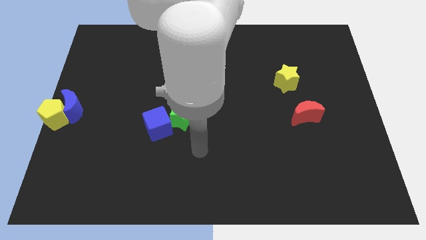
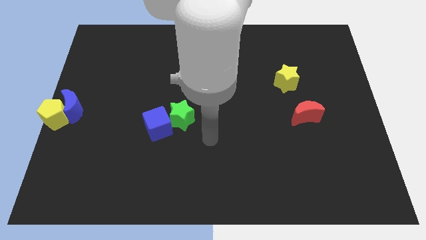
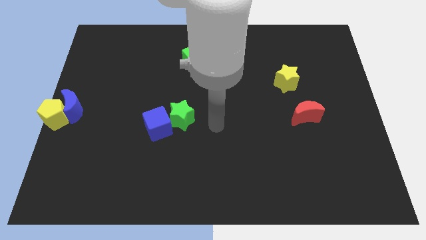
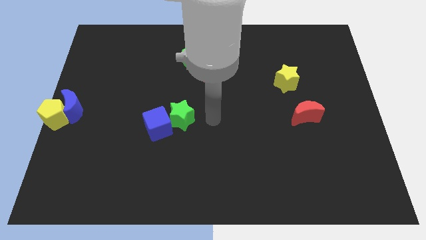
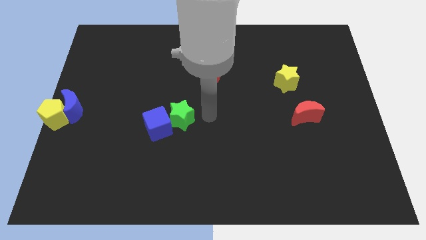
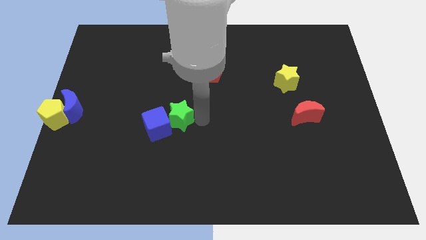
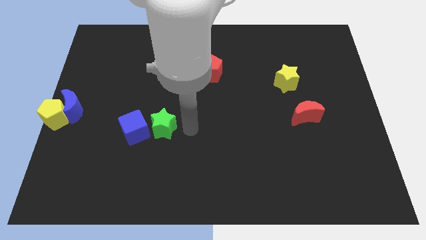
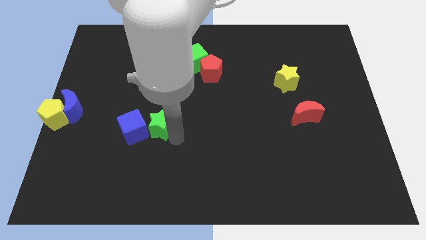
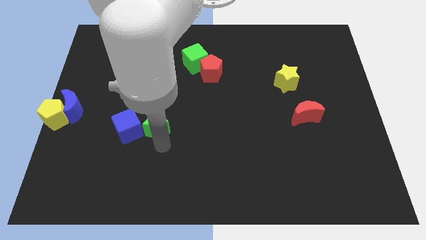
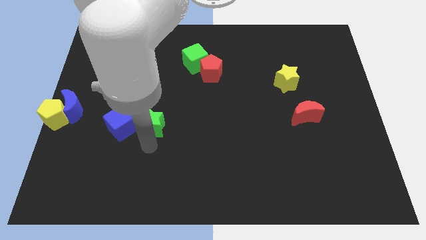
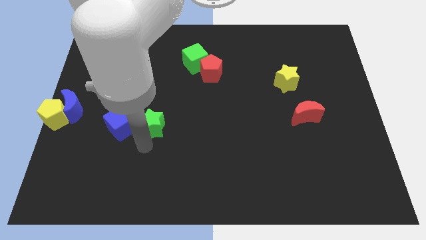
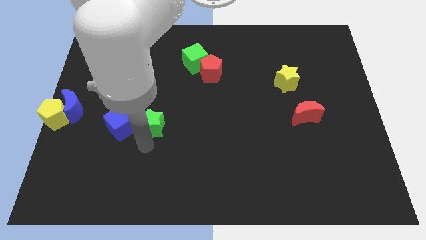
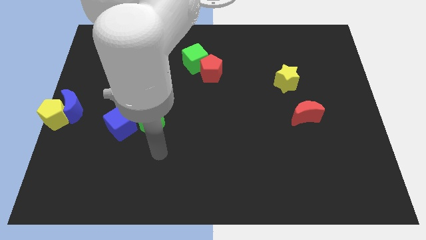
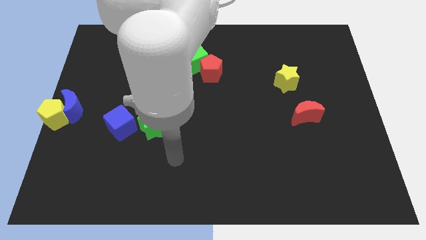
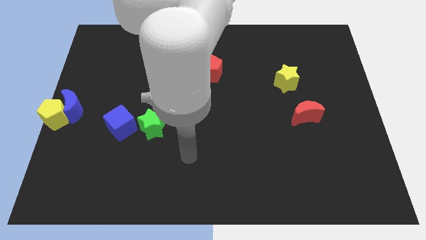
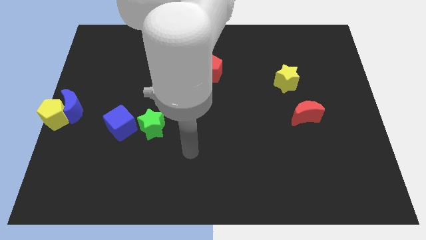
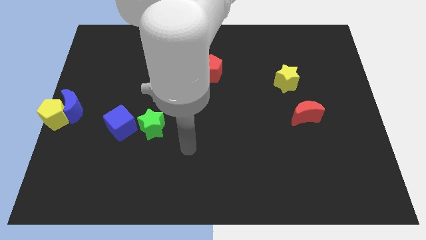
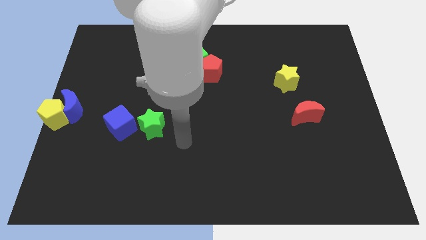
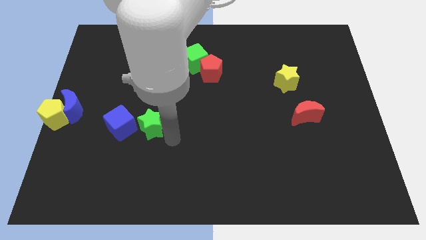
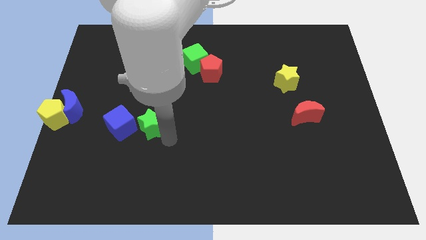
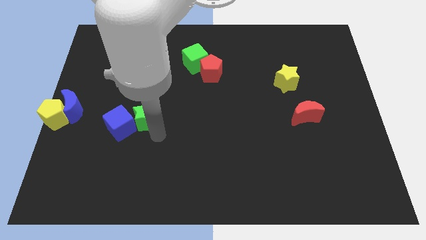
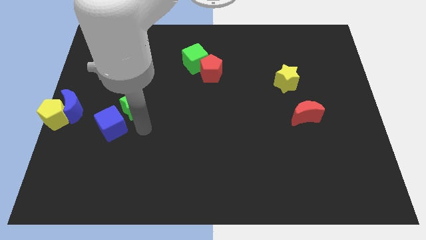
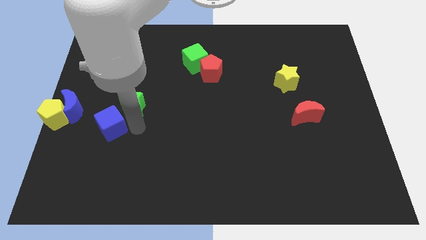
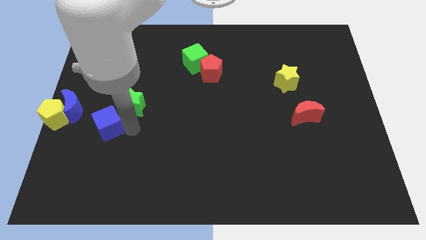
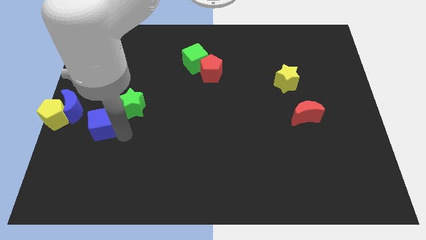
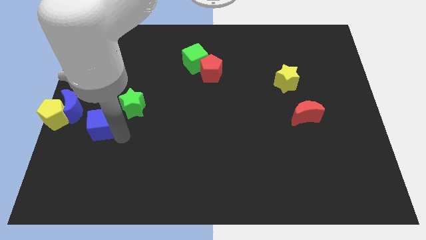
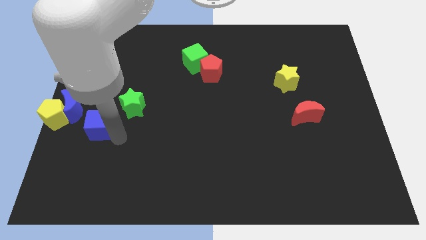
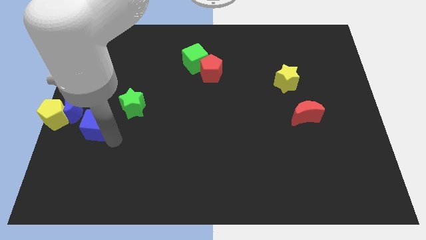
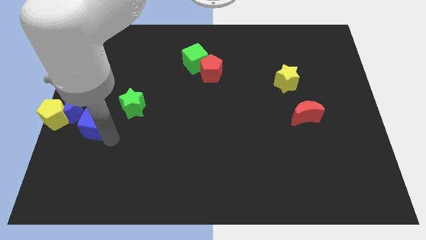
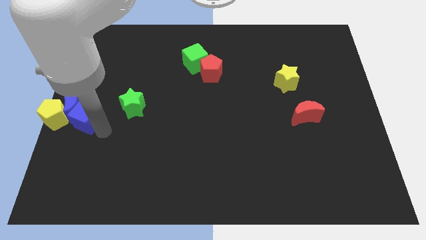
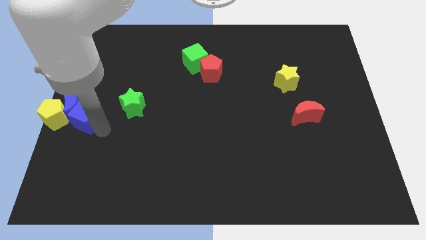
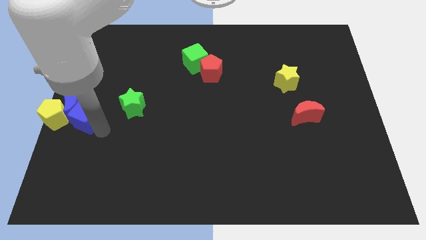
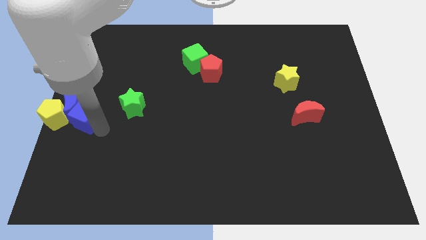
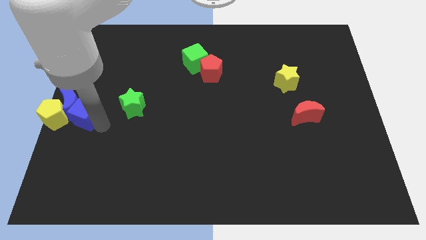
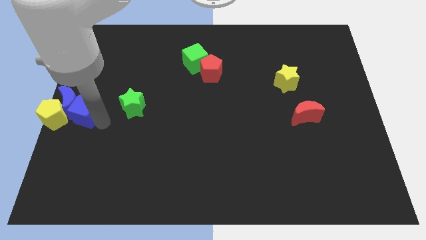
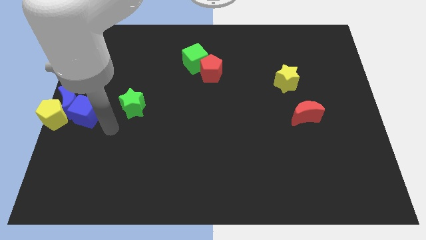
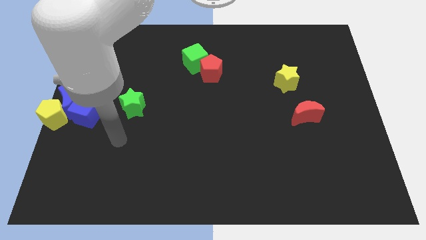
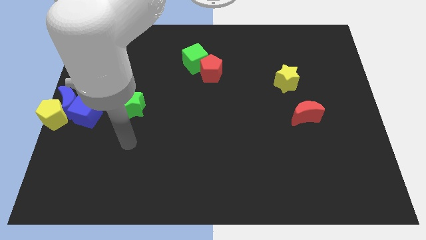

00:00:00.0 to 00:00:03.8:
push the blue cube with green star into the blue moon

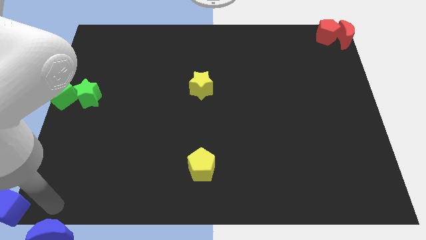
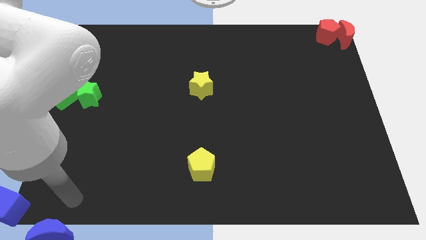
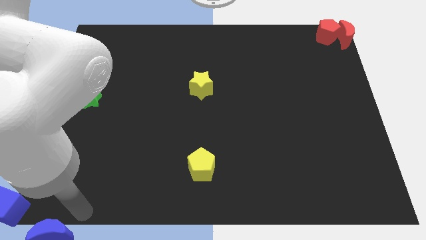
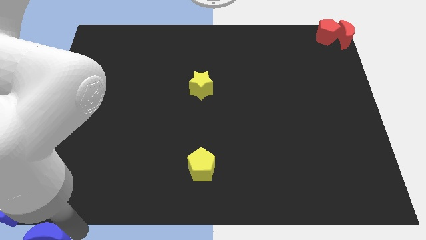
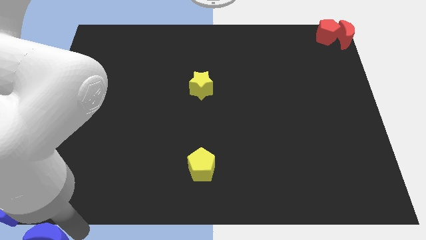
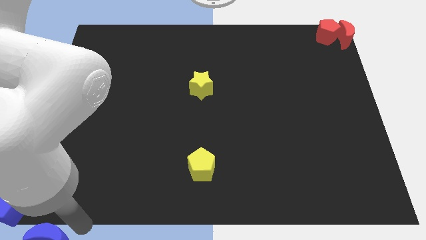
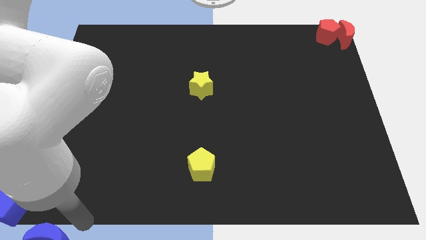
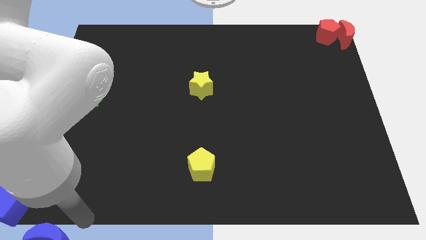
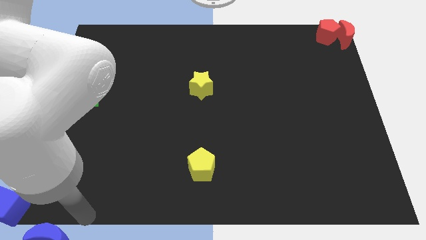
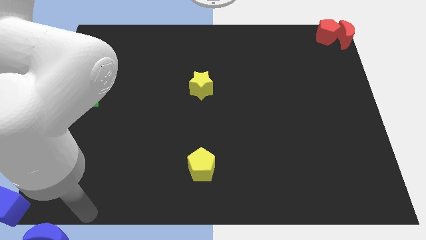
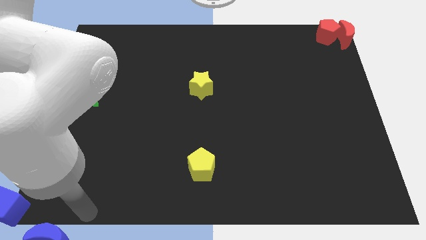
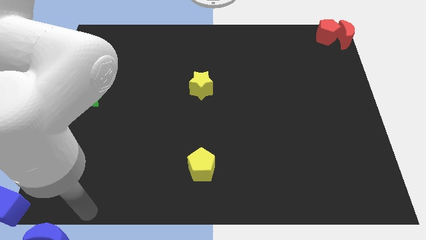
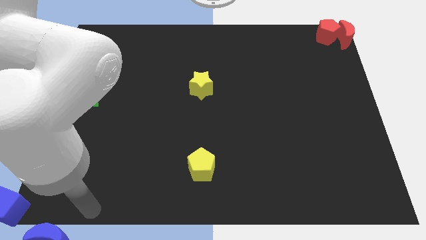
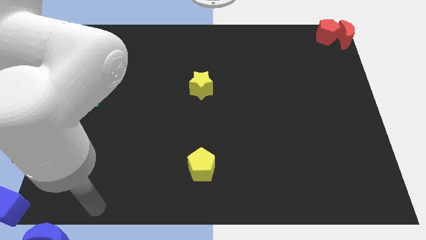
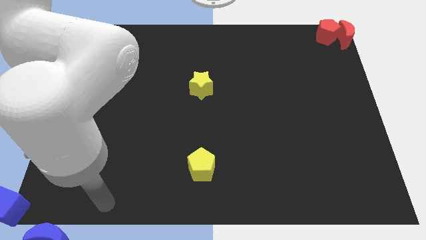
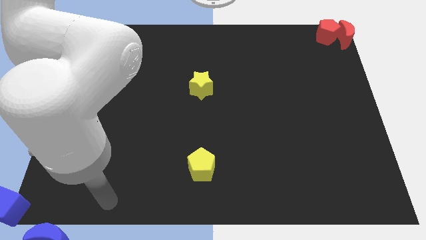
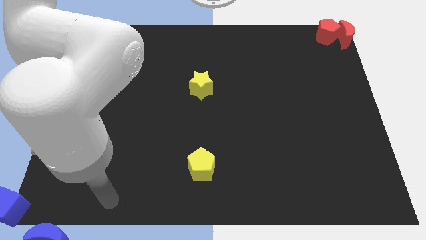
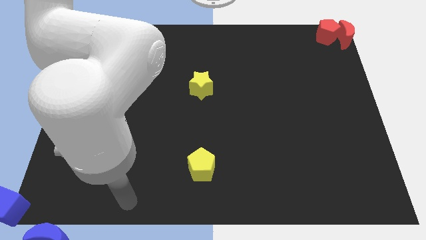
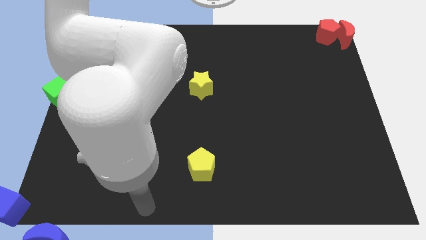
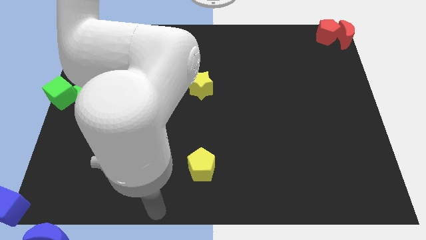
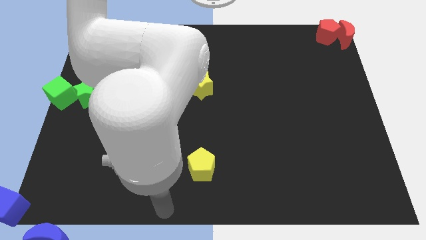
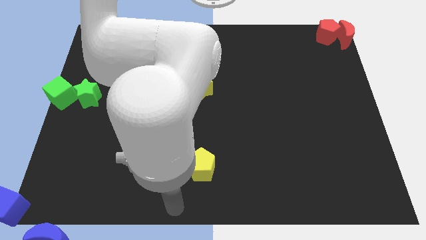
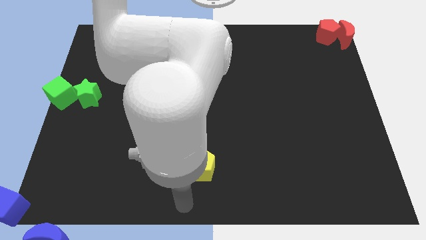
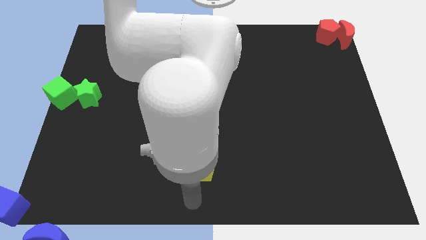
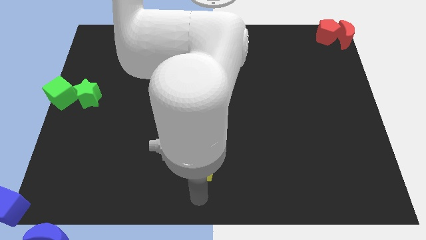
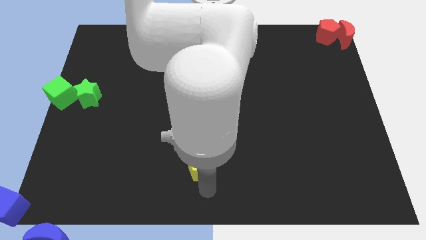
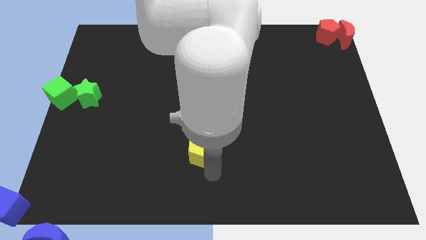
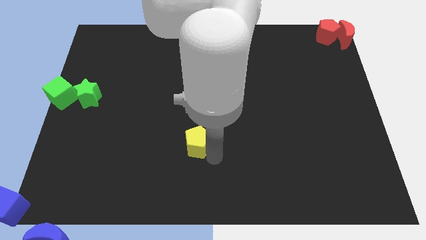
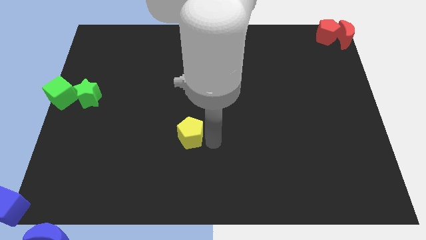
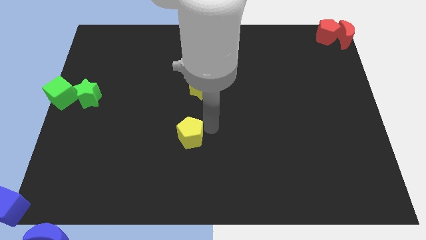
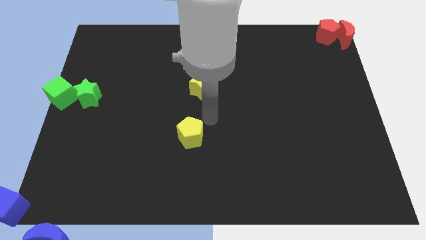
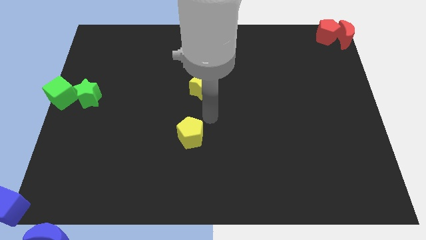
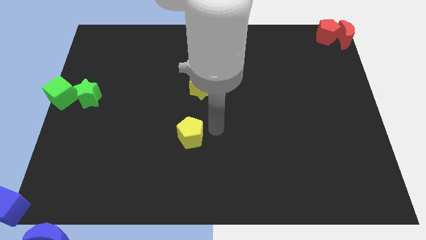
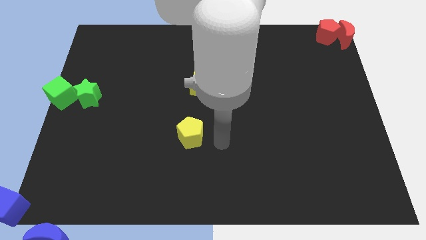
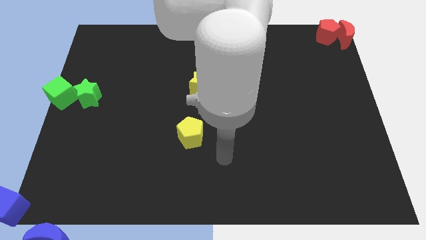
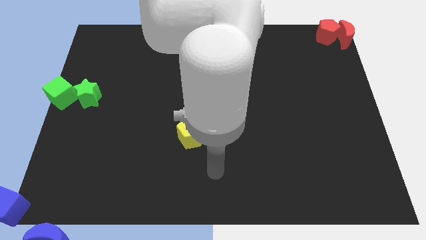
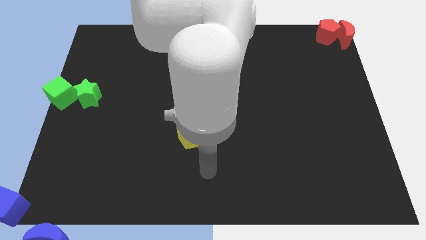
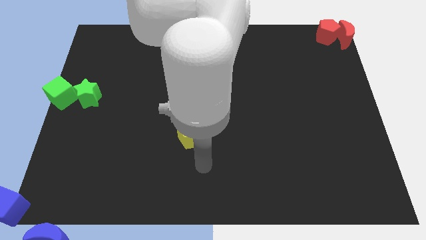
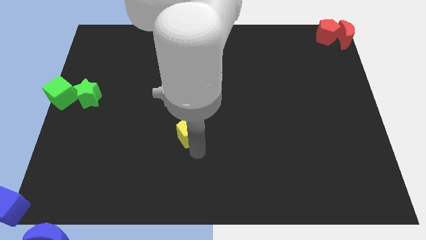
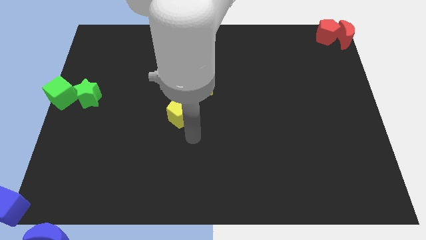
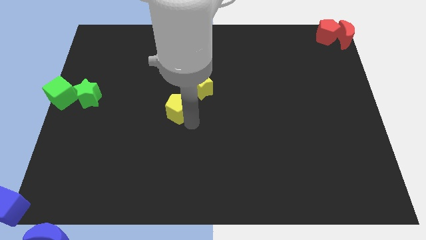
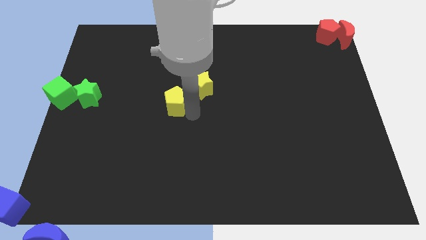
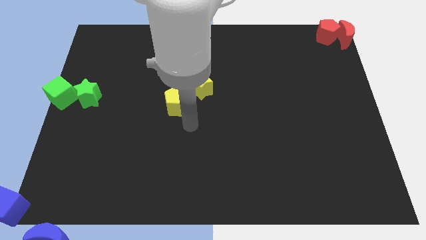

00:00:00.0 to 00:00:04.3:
push the yellow pentagon towards the center of the board

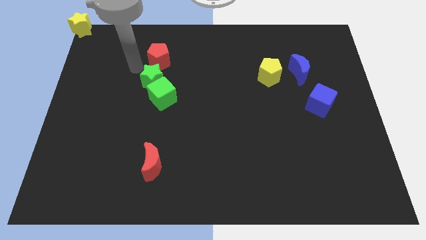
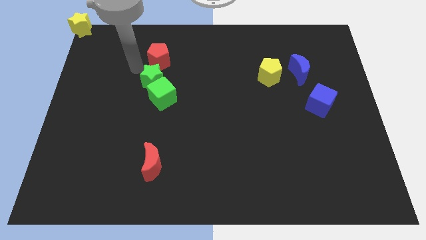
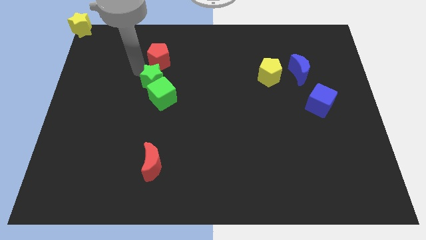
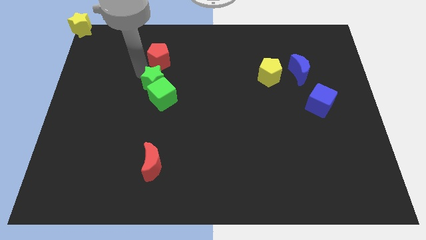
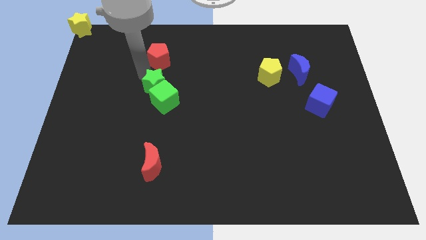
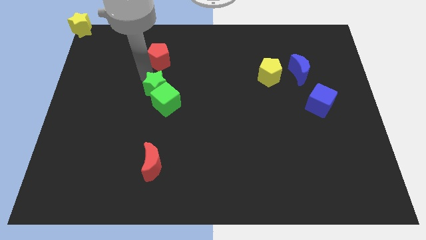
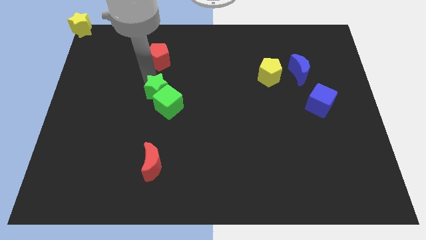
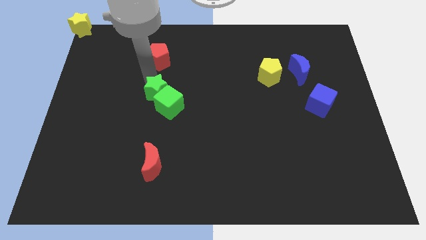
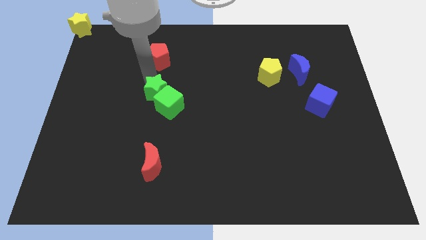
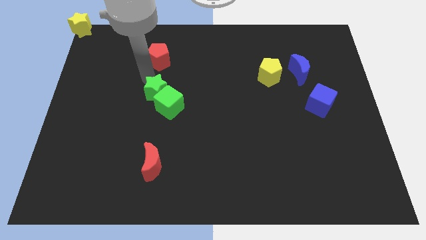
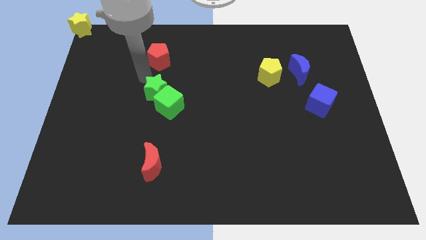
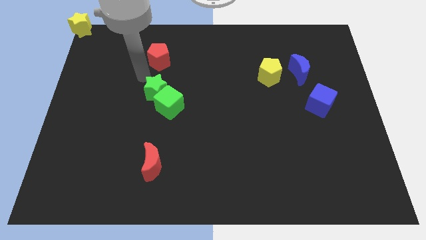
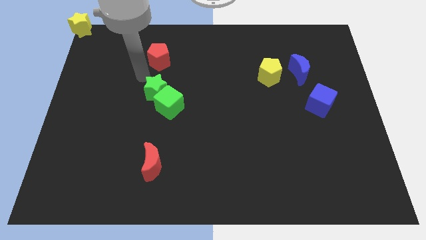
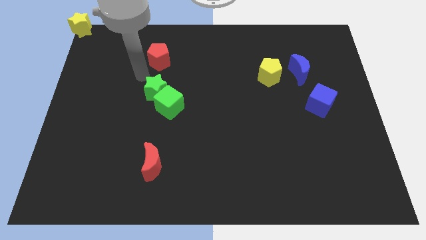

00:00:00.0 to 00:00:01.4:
slide the group of green blocks slightly downwards
